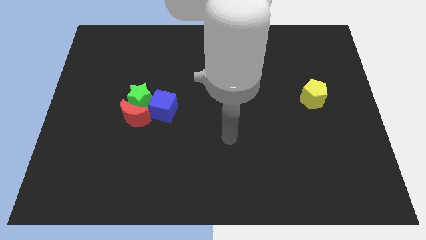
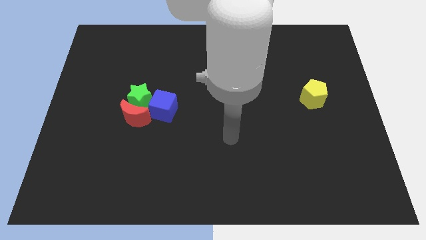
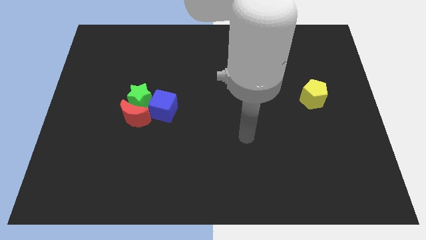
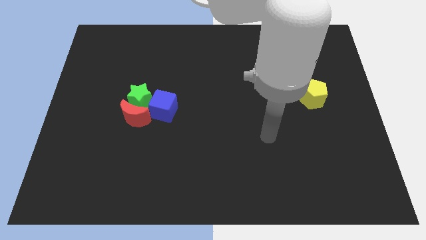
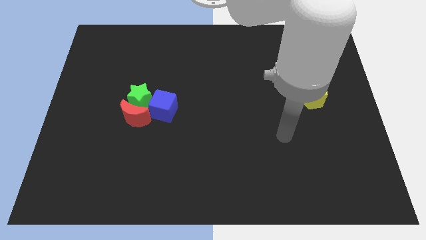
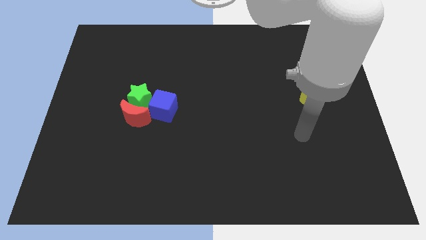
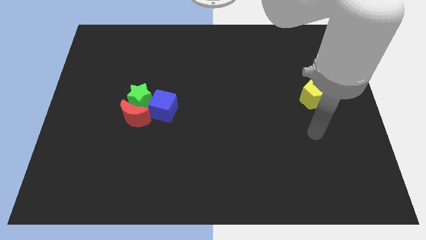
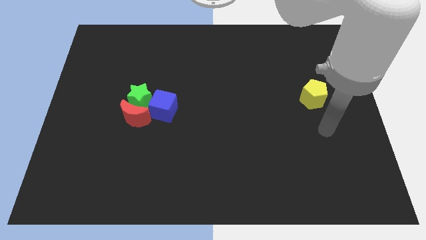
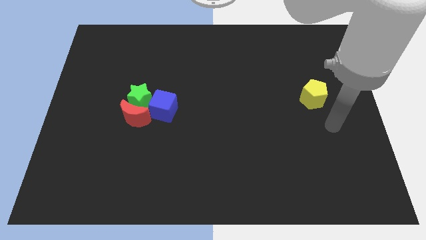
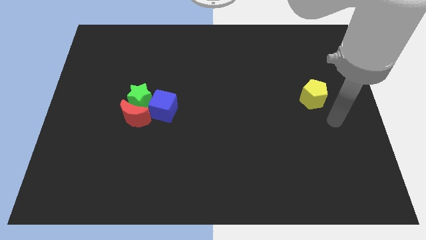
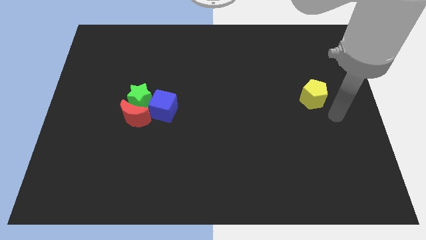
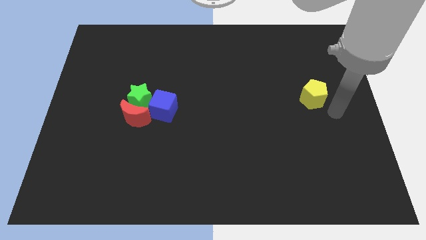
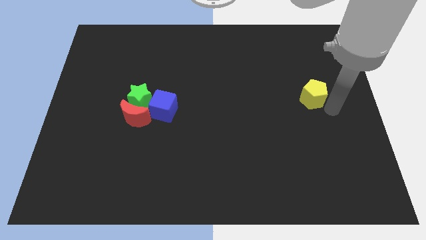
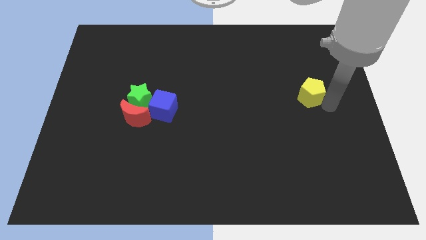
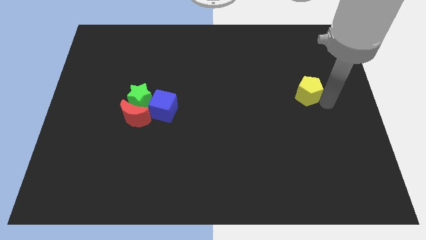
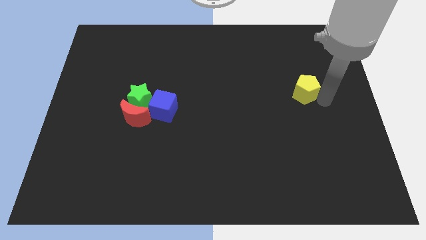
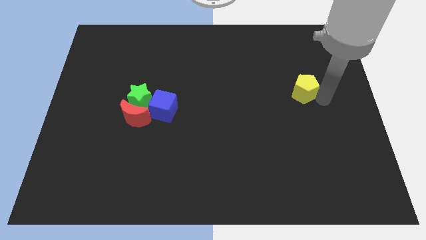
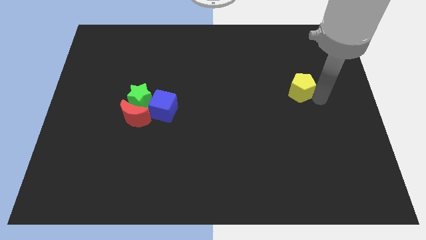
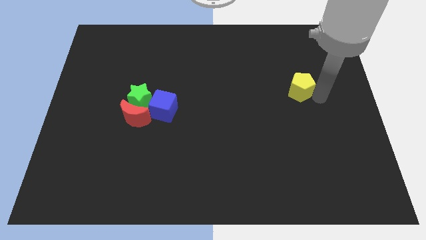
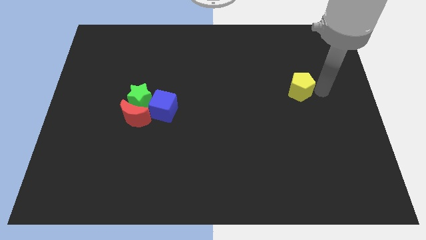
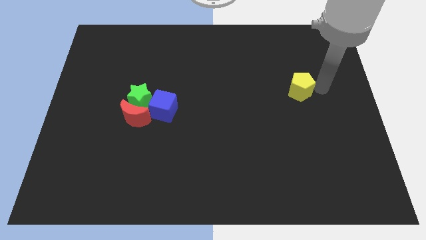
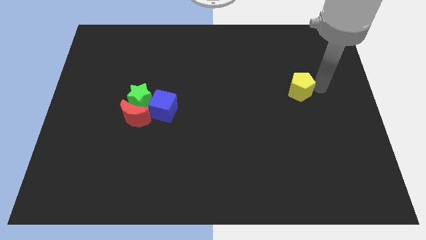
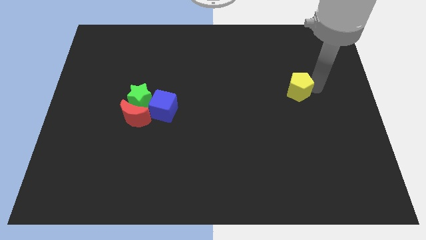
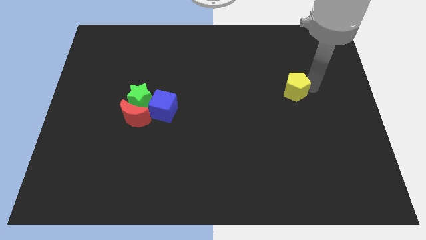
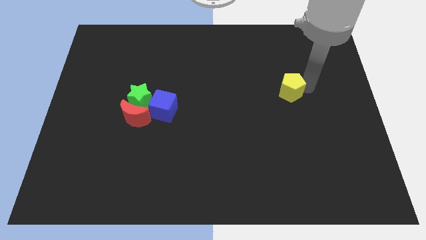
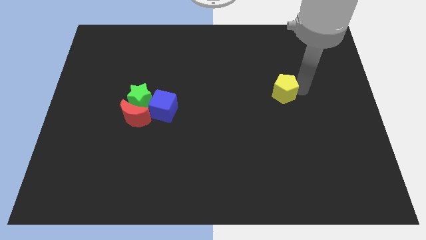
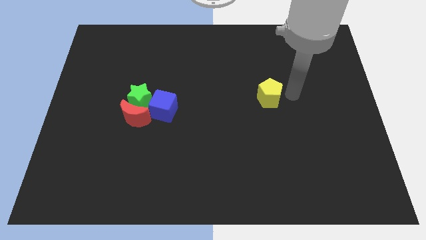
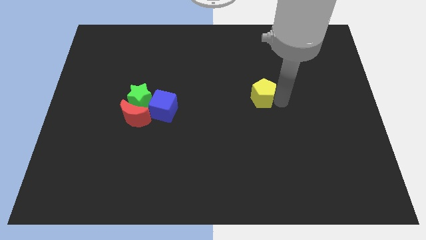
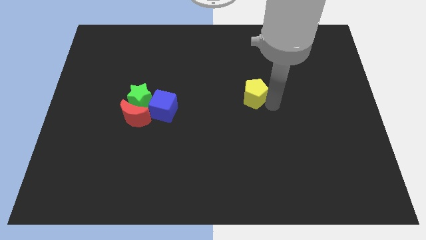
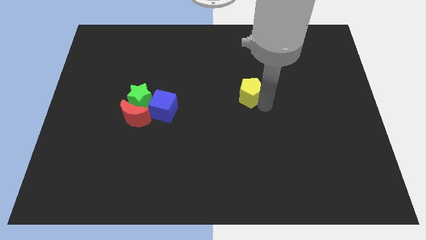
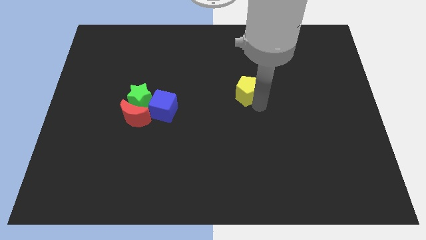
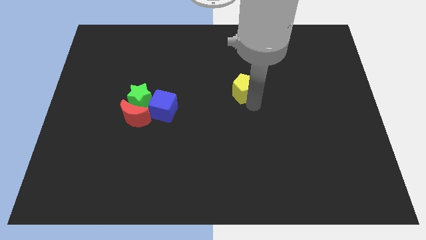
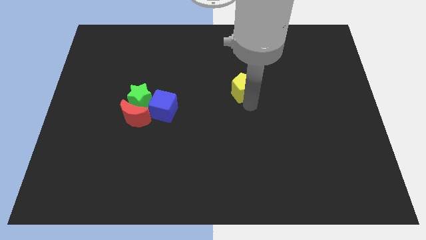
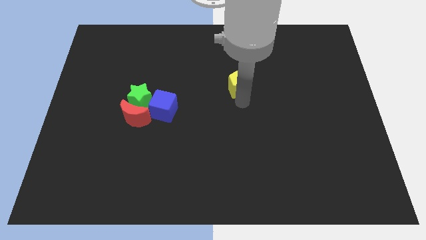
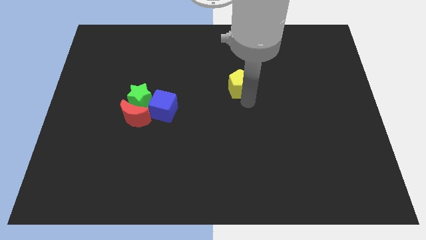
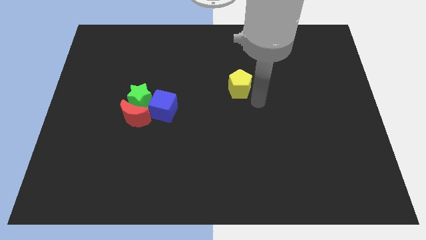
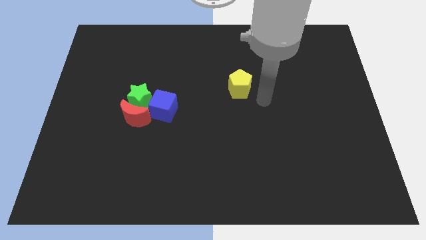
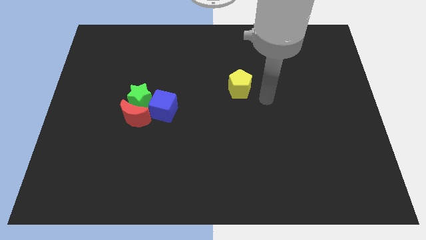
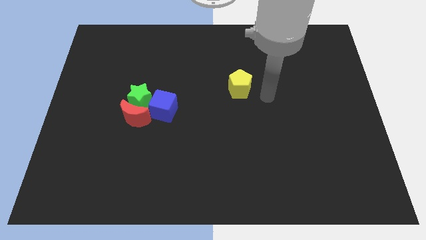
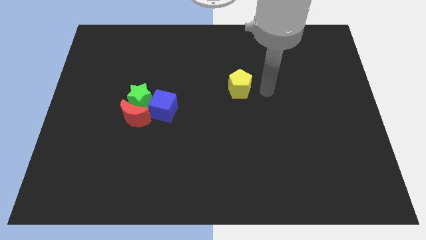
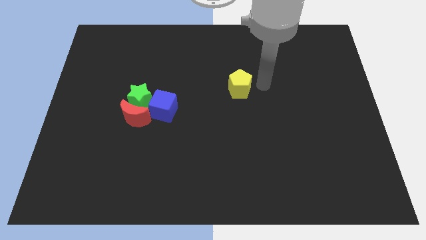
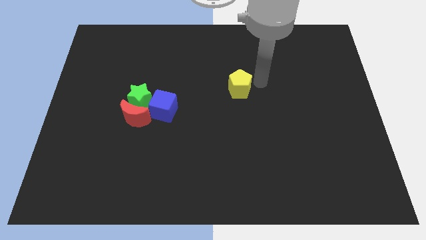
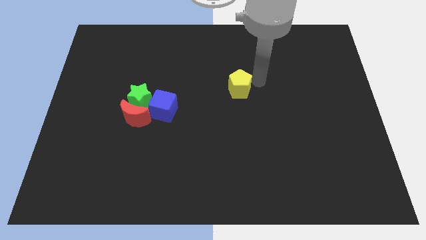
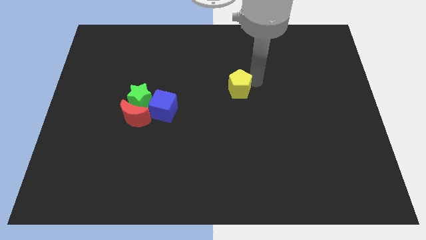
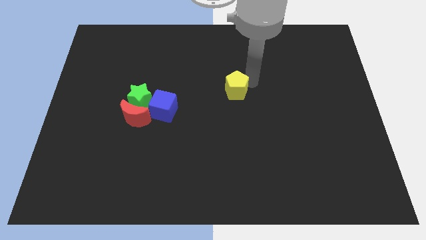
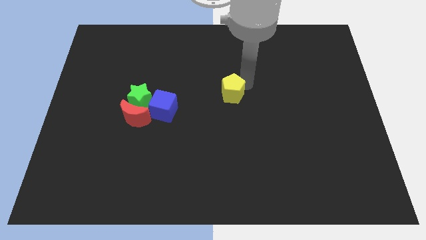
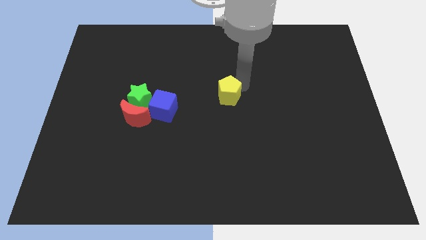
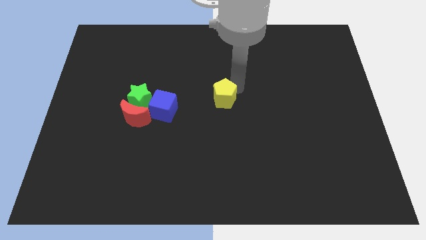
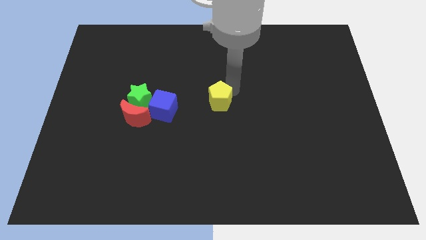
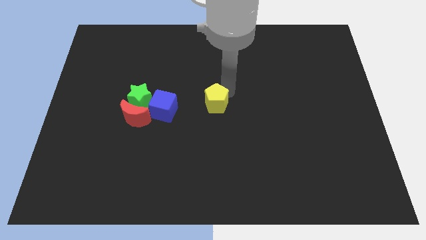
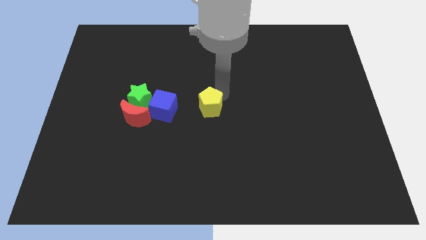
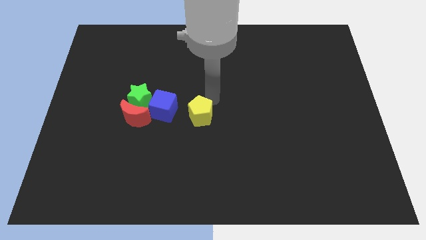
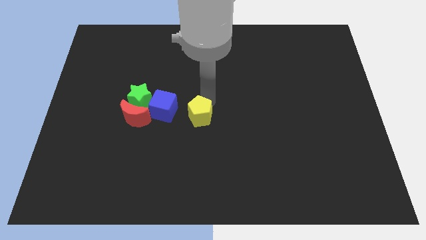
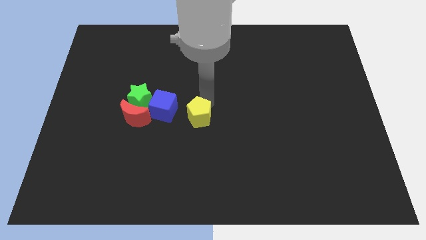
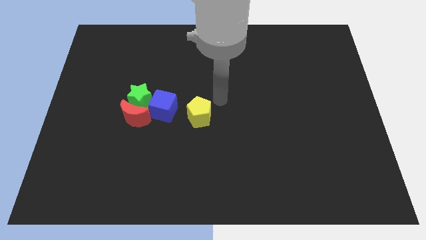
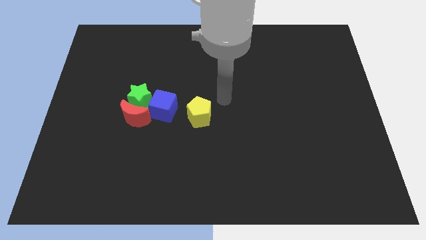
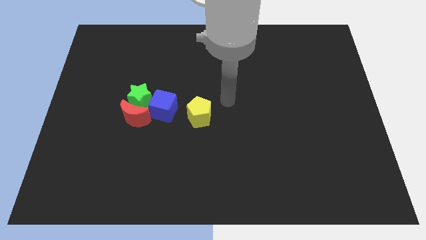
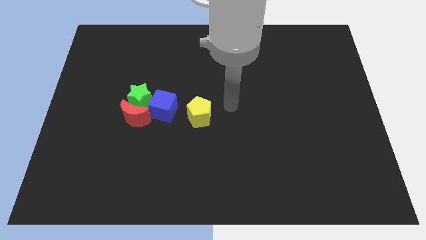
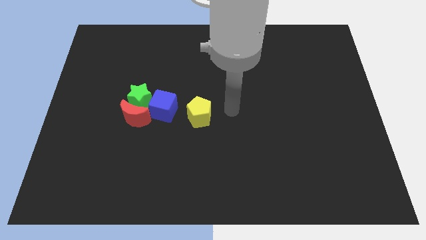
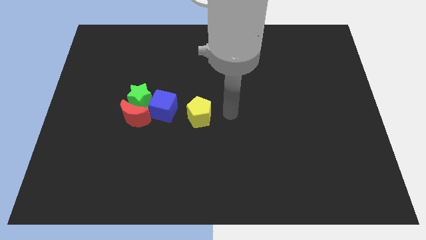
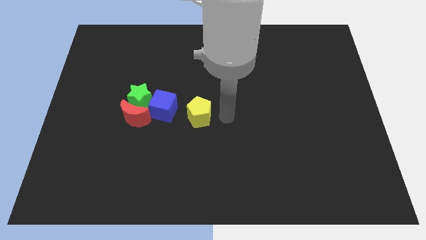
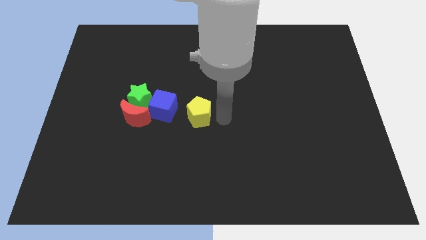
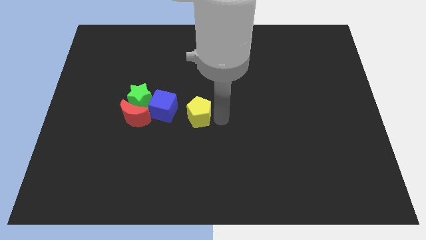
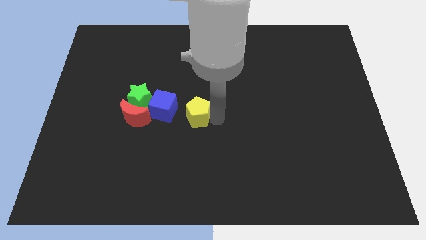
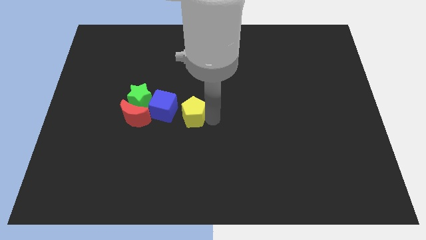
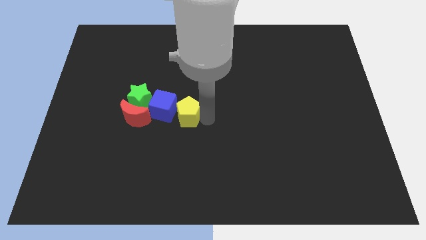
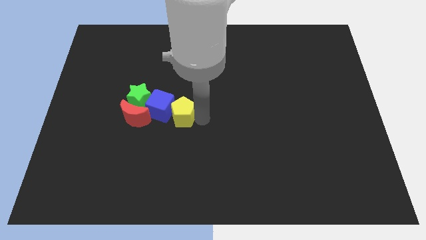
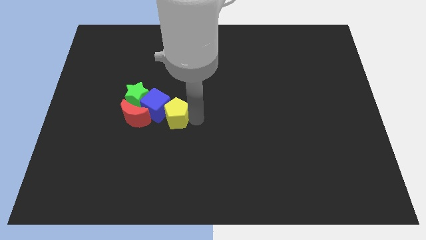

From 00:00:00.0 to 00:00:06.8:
put the pentagon next to the blue block

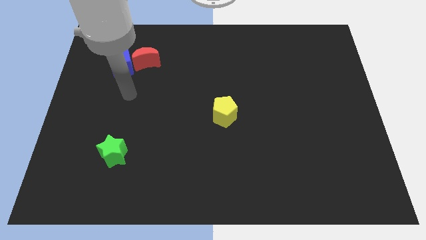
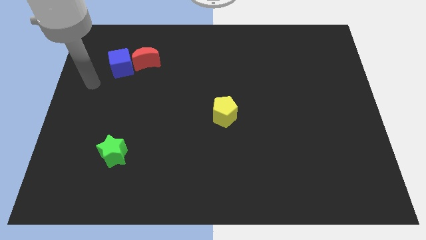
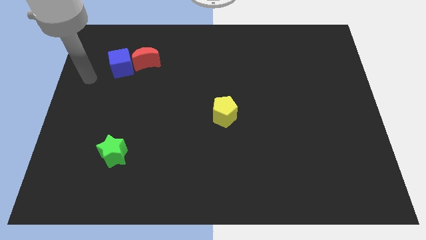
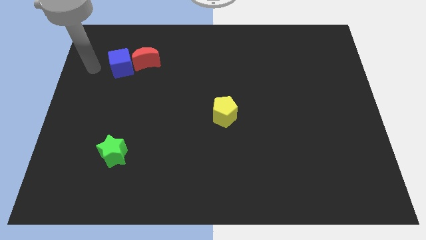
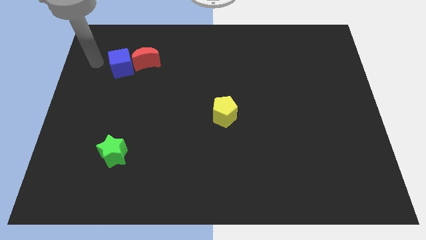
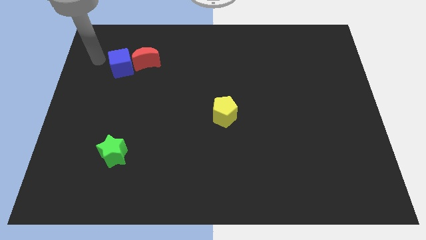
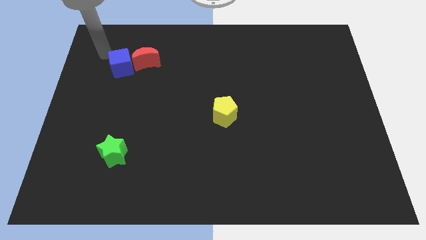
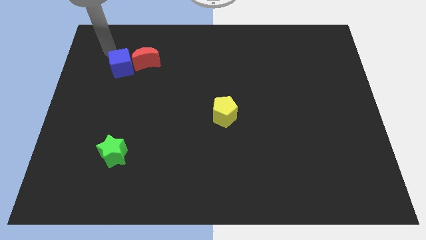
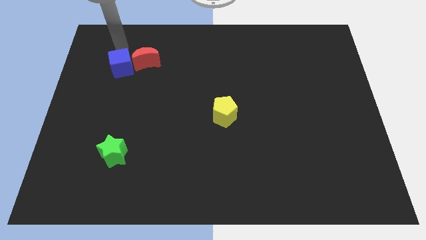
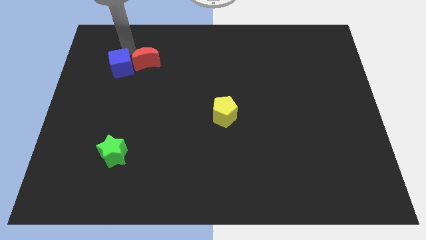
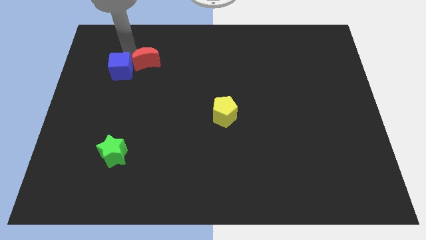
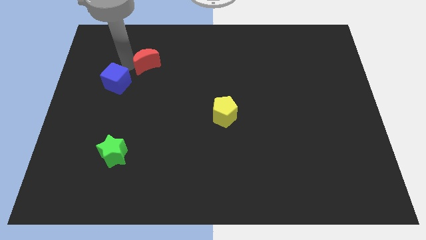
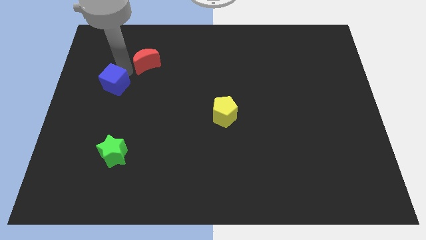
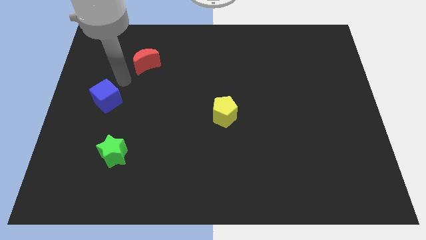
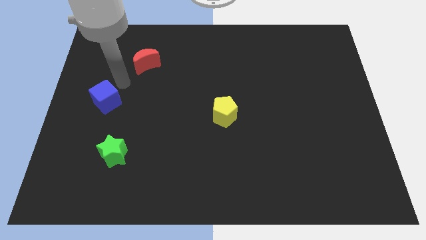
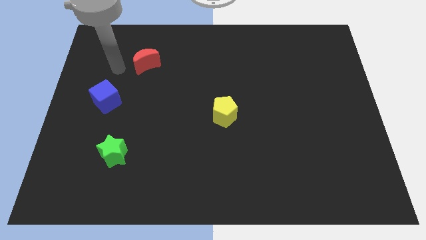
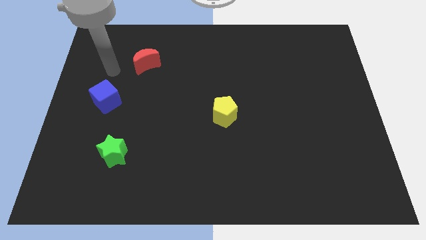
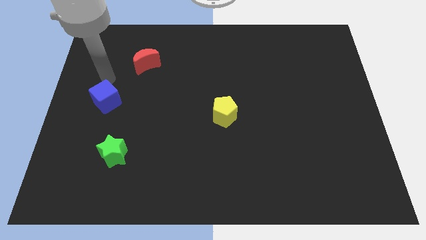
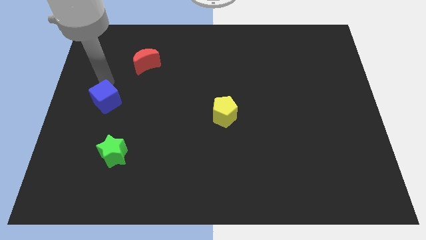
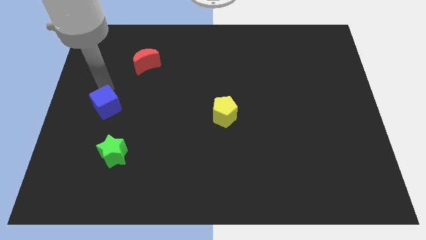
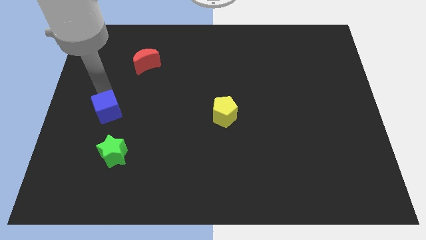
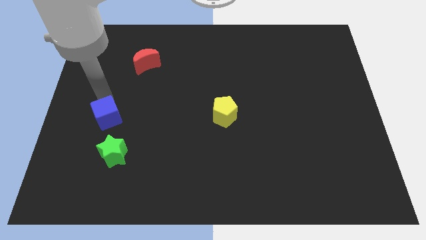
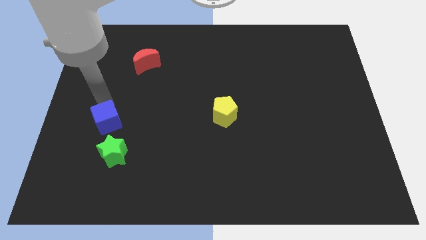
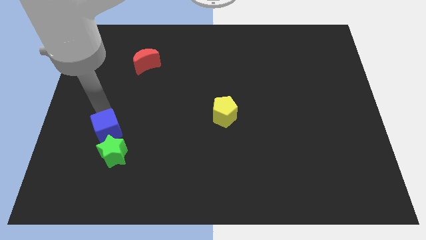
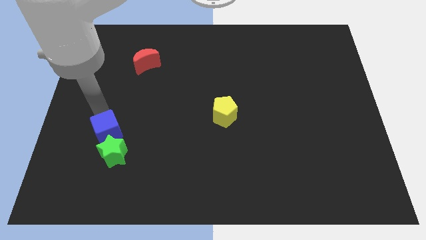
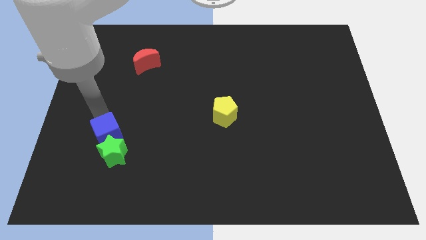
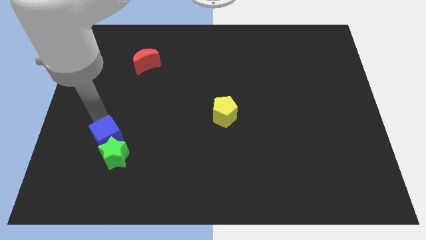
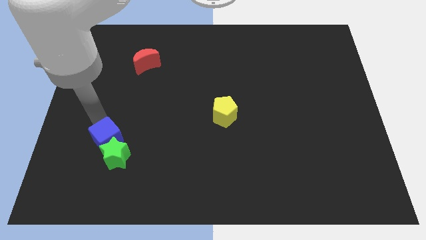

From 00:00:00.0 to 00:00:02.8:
move the blue cube towards the green star
